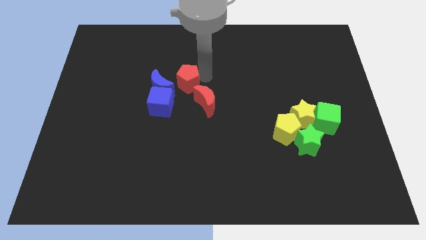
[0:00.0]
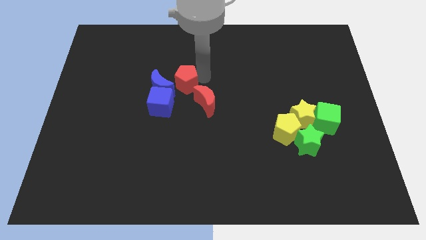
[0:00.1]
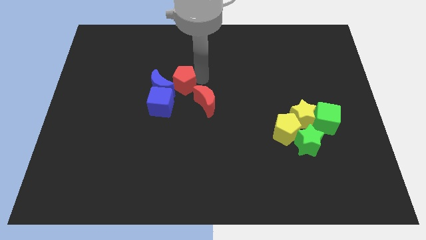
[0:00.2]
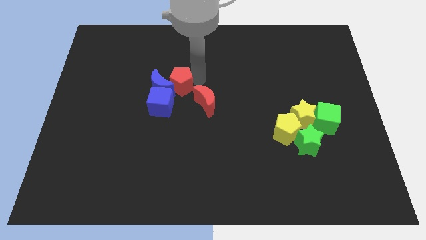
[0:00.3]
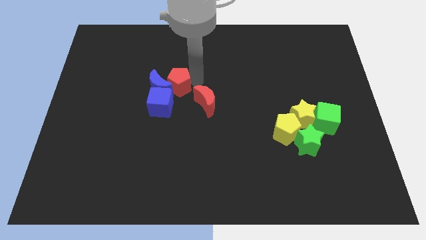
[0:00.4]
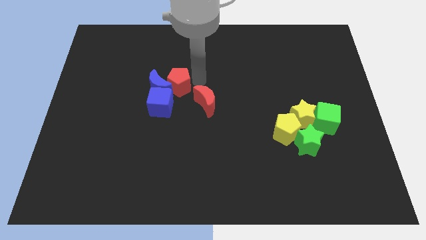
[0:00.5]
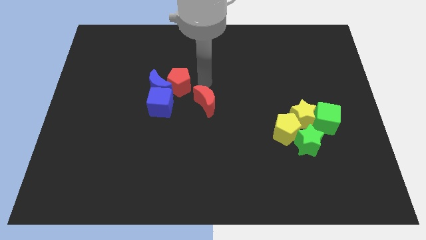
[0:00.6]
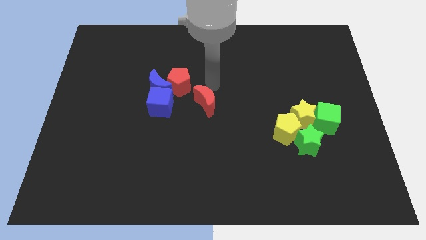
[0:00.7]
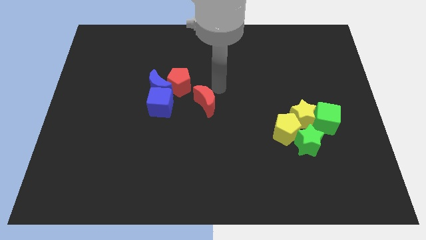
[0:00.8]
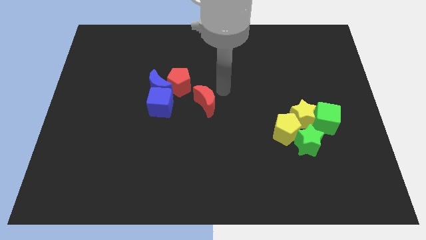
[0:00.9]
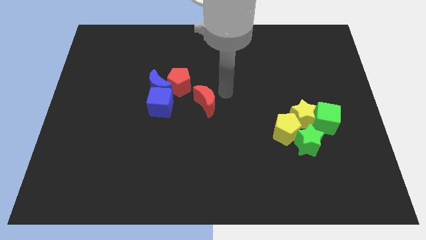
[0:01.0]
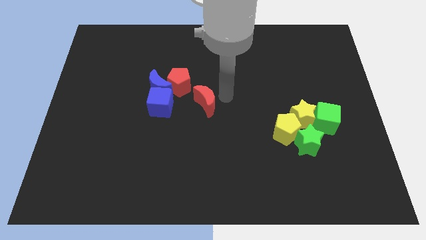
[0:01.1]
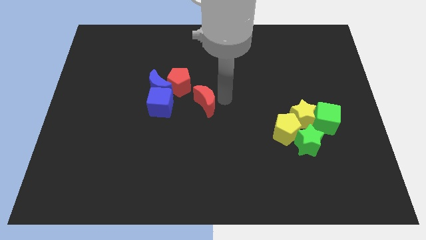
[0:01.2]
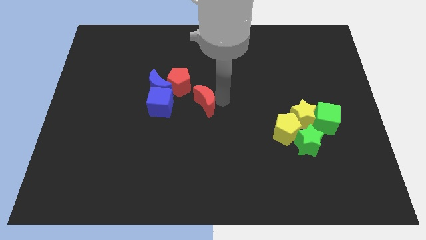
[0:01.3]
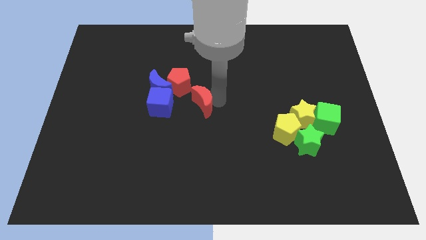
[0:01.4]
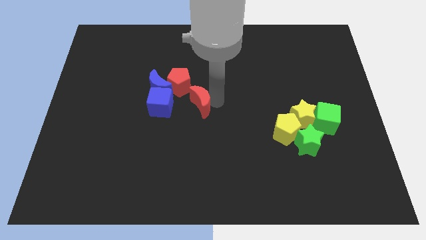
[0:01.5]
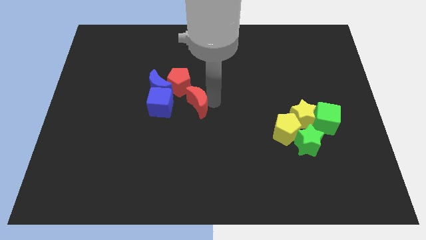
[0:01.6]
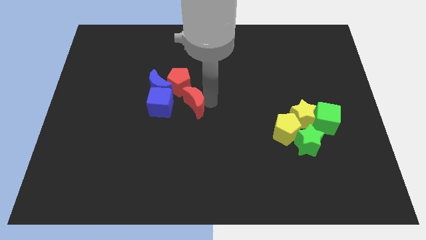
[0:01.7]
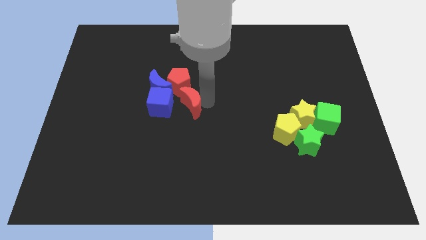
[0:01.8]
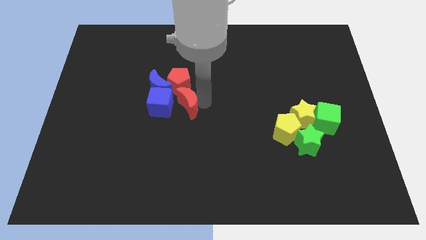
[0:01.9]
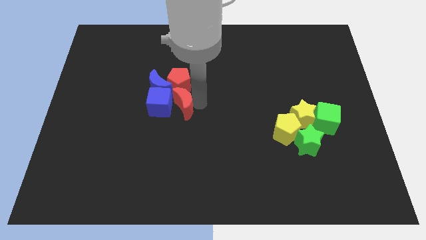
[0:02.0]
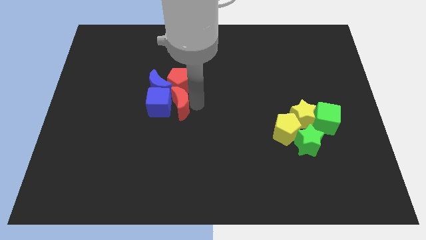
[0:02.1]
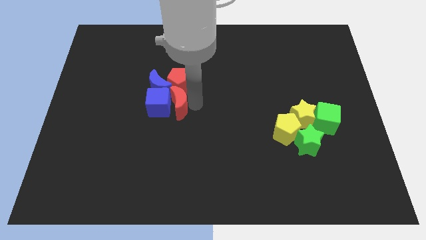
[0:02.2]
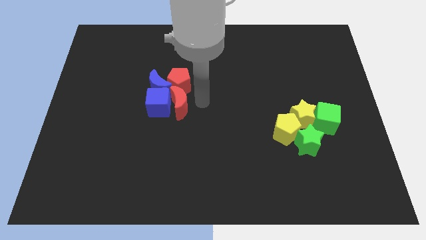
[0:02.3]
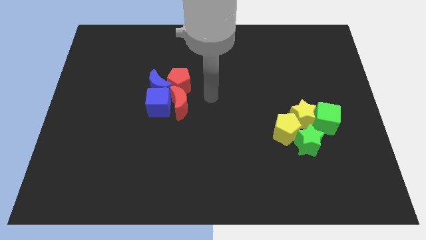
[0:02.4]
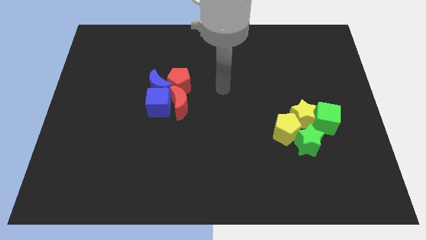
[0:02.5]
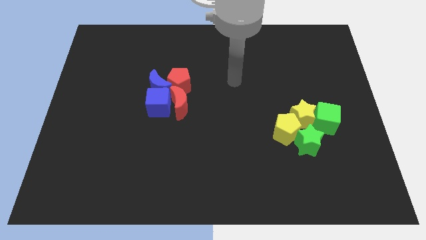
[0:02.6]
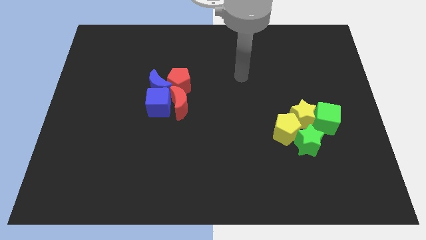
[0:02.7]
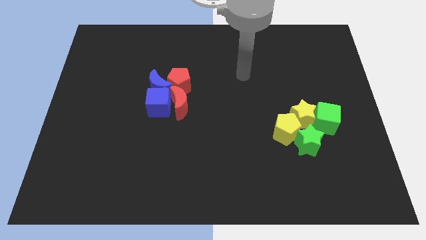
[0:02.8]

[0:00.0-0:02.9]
push the red blocks towards the blue blocks

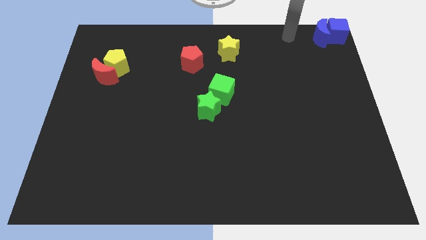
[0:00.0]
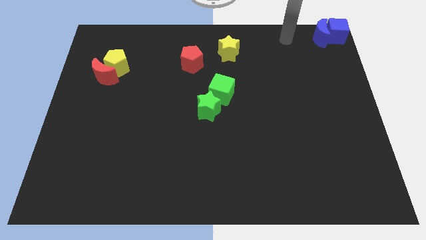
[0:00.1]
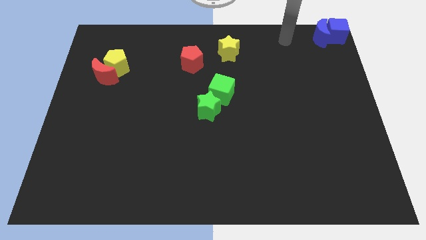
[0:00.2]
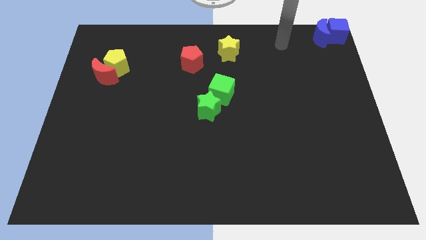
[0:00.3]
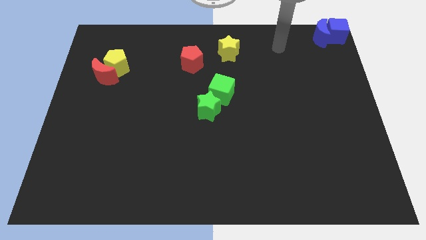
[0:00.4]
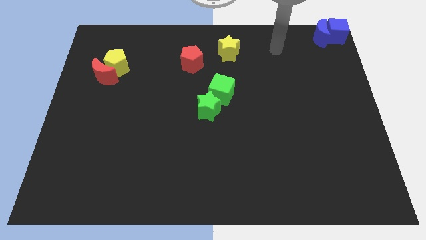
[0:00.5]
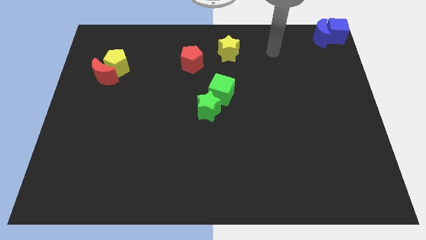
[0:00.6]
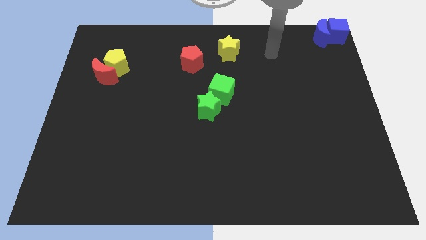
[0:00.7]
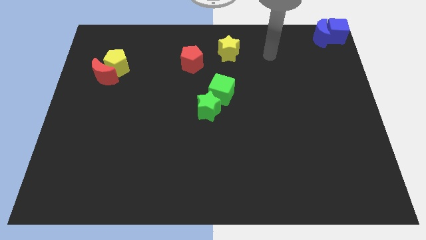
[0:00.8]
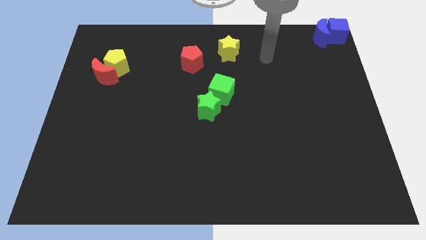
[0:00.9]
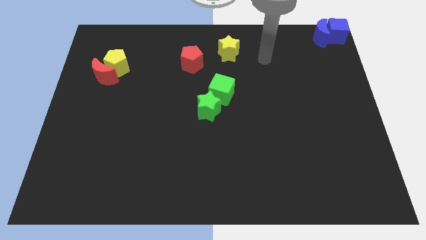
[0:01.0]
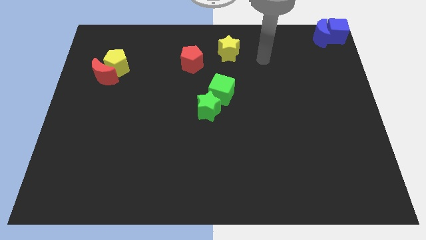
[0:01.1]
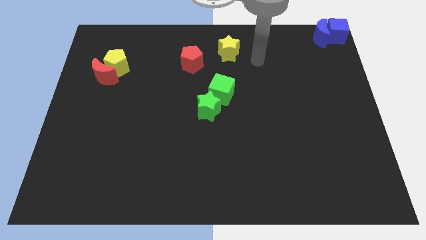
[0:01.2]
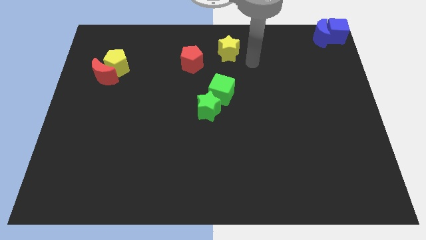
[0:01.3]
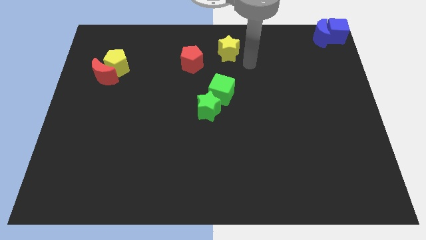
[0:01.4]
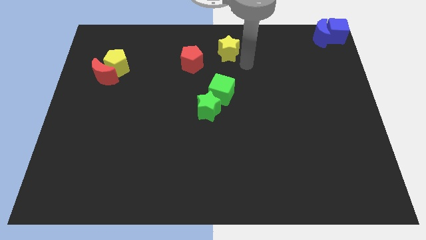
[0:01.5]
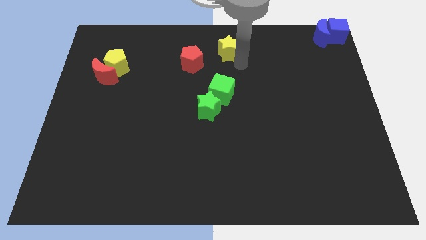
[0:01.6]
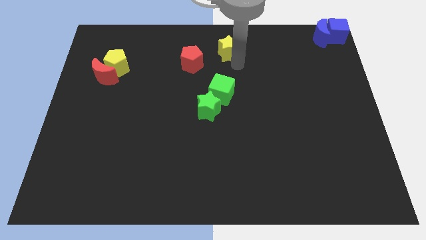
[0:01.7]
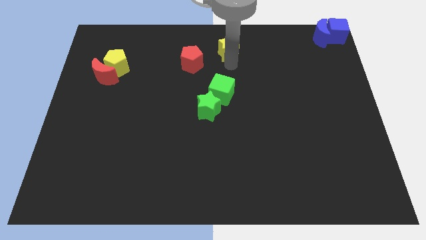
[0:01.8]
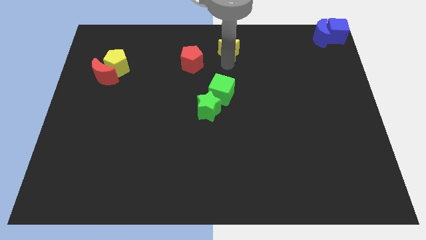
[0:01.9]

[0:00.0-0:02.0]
move your arm to the bottom of the yellow star

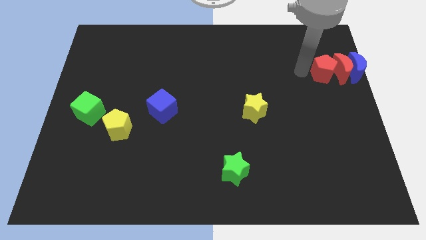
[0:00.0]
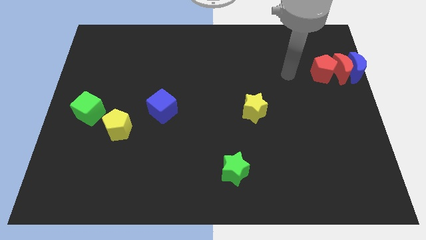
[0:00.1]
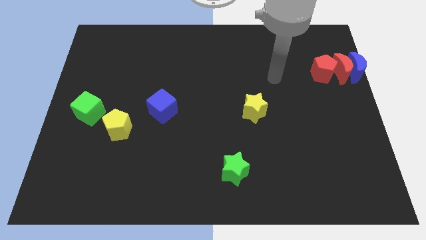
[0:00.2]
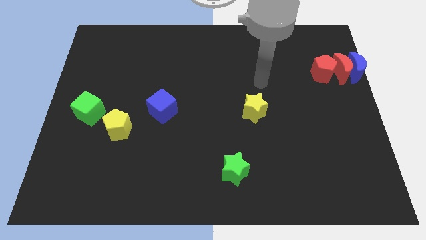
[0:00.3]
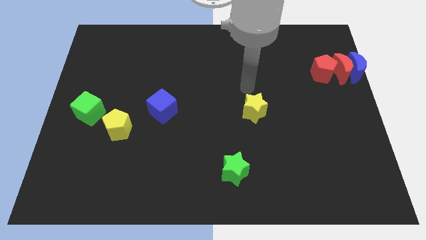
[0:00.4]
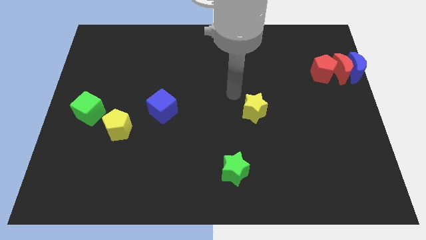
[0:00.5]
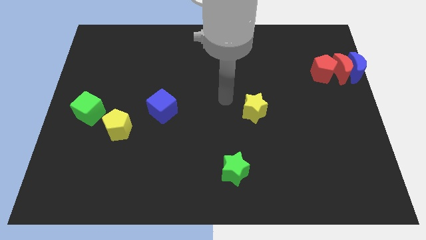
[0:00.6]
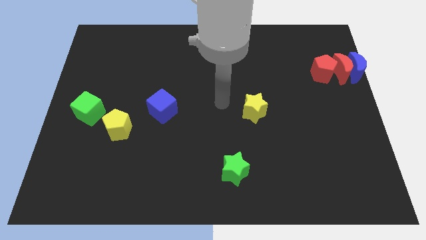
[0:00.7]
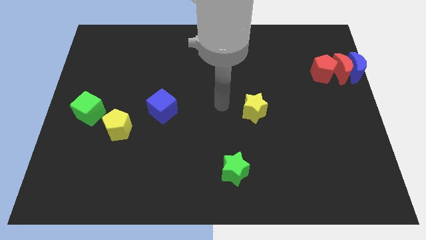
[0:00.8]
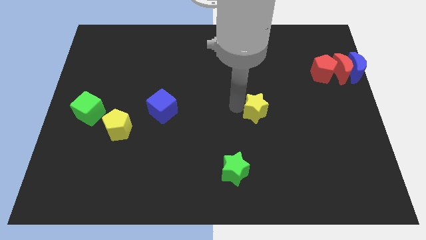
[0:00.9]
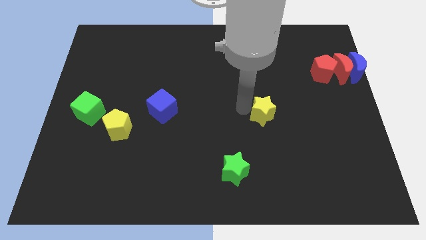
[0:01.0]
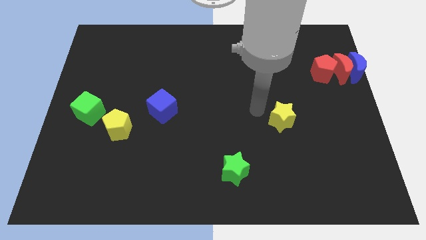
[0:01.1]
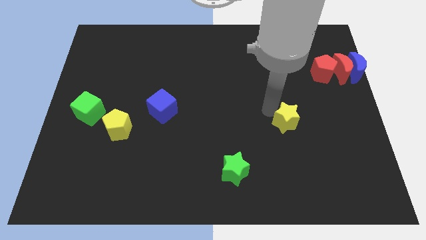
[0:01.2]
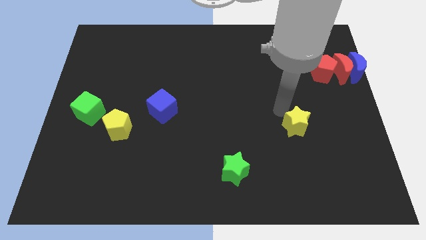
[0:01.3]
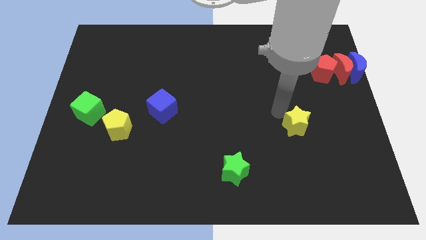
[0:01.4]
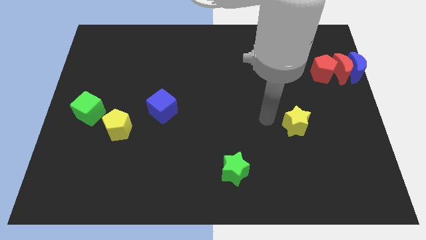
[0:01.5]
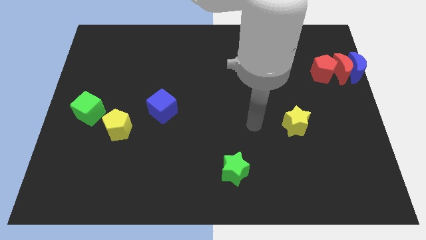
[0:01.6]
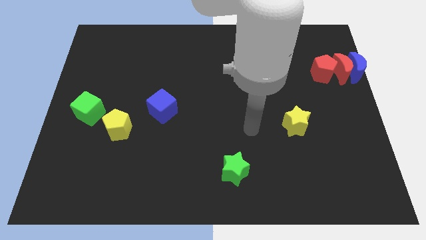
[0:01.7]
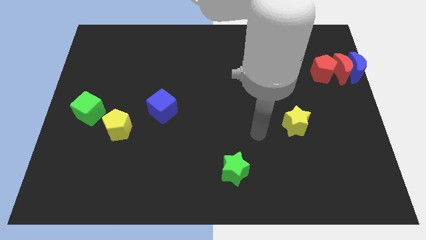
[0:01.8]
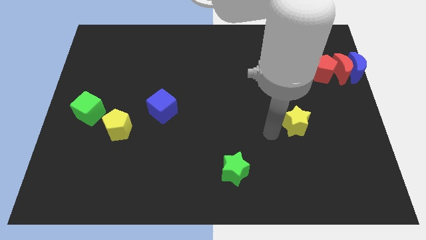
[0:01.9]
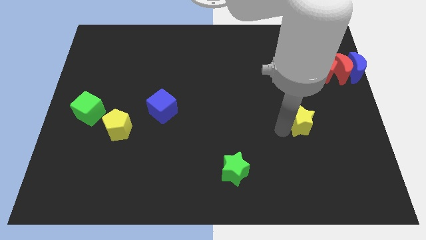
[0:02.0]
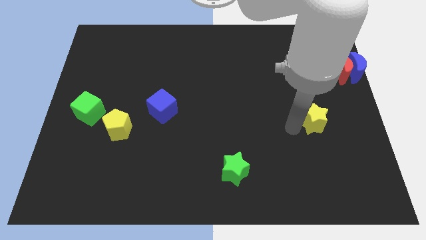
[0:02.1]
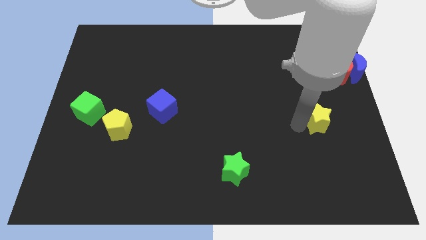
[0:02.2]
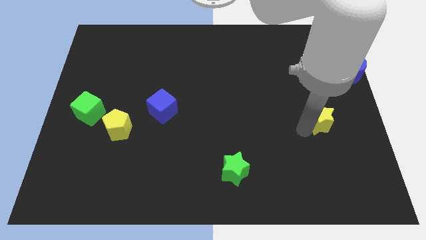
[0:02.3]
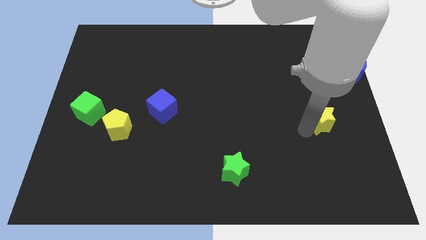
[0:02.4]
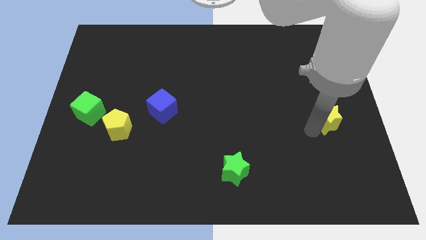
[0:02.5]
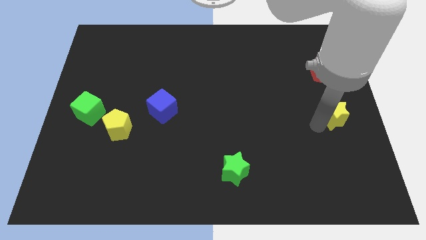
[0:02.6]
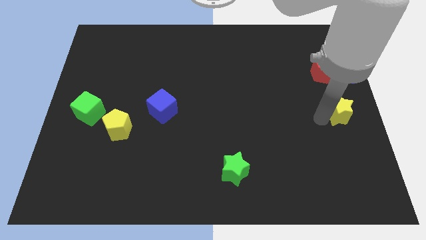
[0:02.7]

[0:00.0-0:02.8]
put the yellow star vertically below the red pentagon

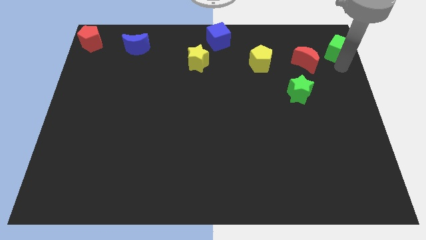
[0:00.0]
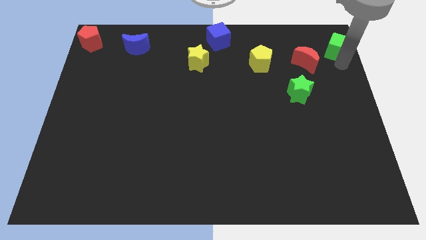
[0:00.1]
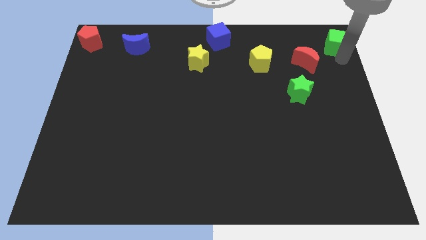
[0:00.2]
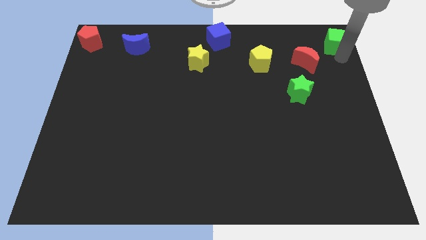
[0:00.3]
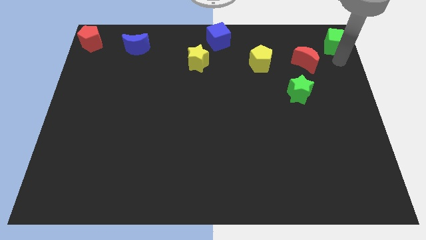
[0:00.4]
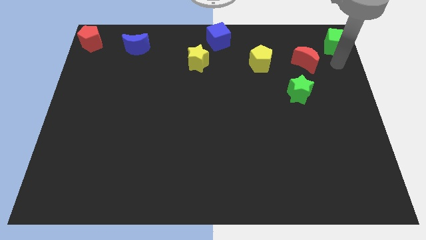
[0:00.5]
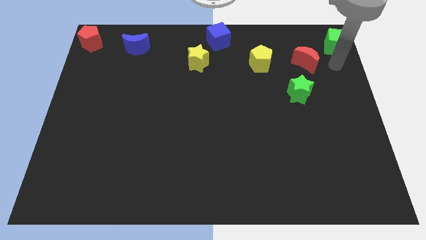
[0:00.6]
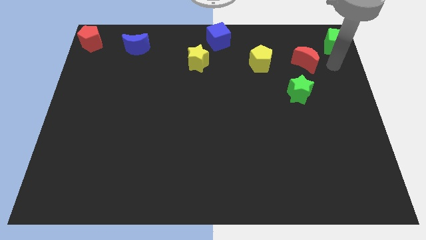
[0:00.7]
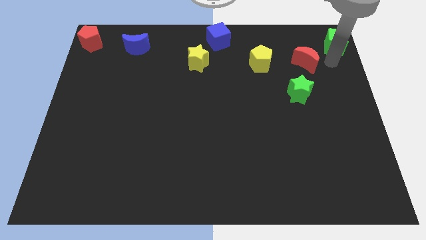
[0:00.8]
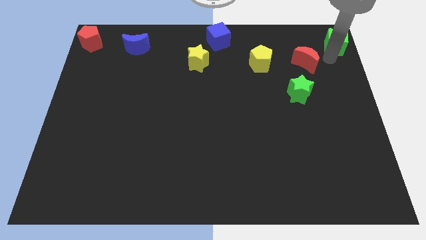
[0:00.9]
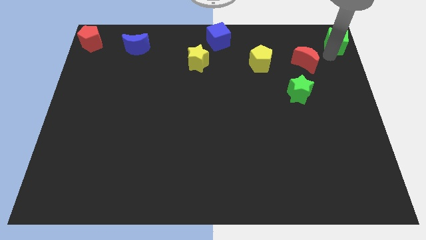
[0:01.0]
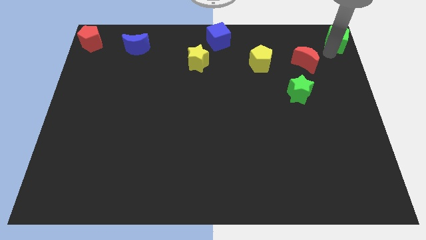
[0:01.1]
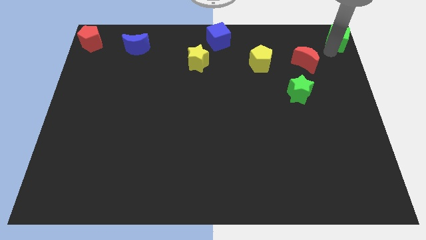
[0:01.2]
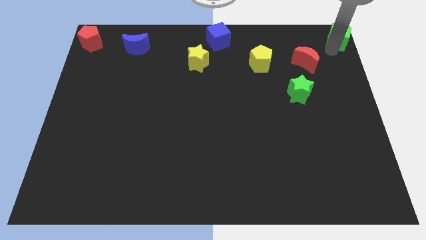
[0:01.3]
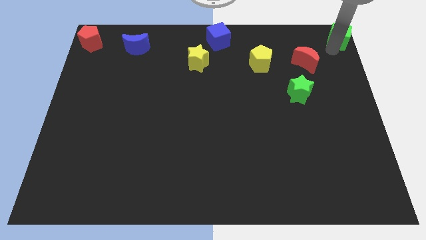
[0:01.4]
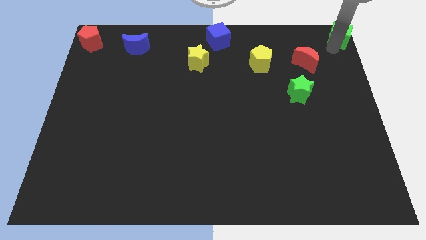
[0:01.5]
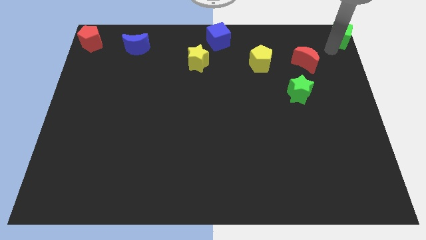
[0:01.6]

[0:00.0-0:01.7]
push the green cube to the top right corner
